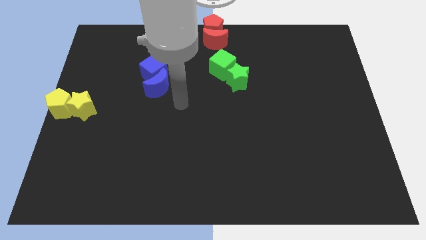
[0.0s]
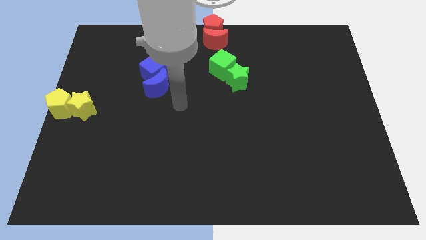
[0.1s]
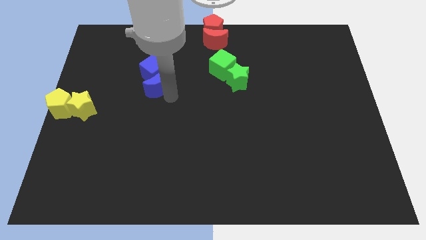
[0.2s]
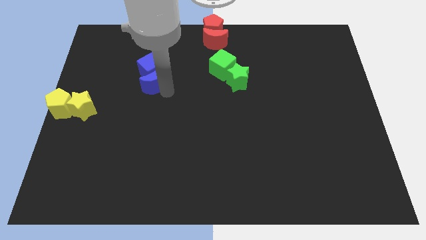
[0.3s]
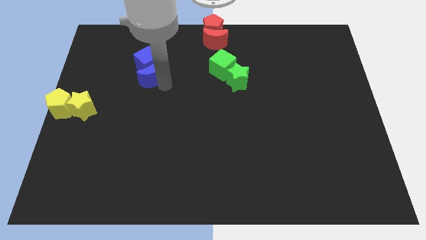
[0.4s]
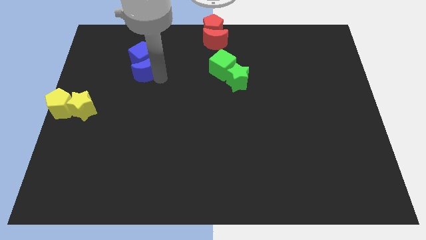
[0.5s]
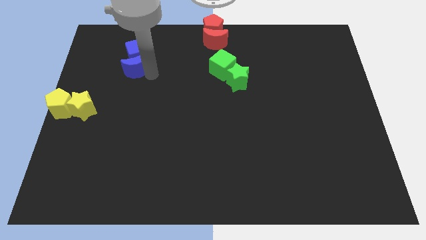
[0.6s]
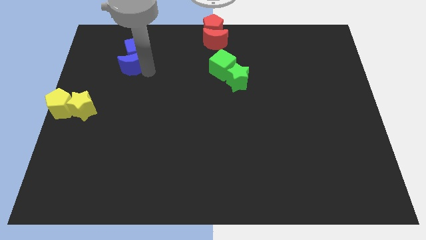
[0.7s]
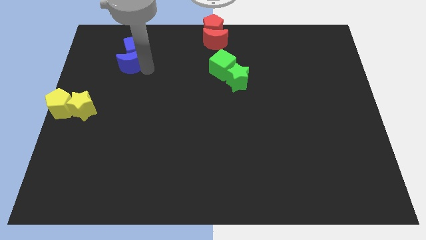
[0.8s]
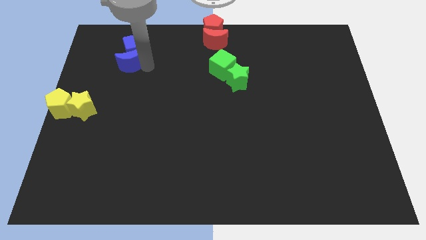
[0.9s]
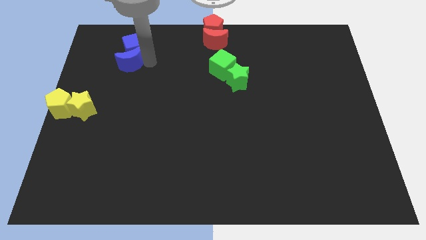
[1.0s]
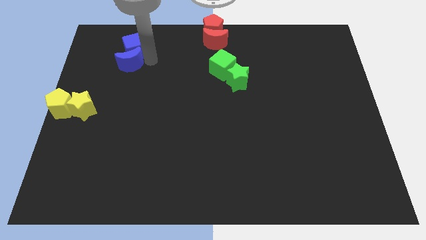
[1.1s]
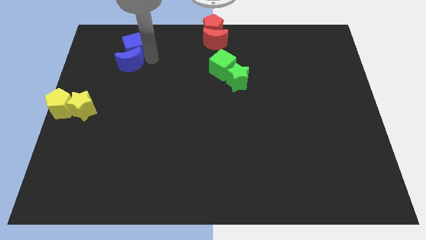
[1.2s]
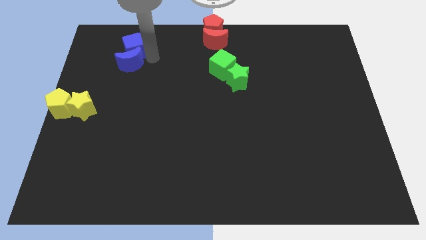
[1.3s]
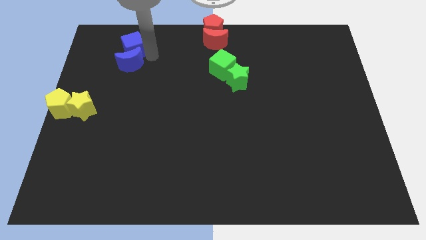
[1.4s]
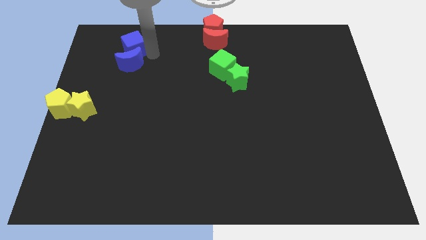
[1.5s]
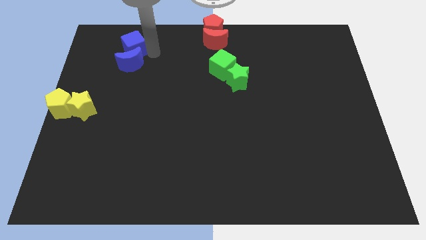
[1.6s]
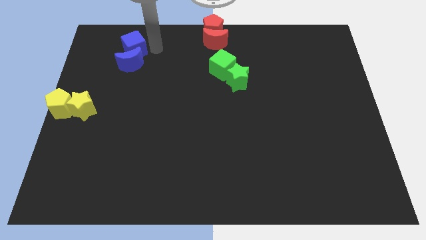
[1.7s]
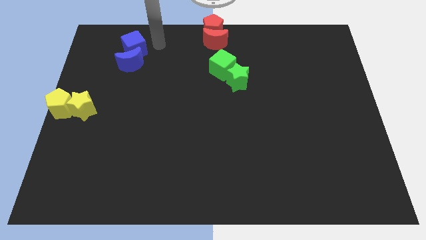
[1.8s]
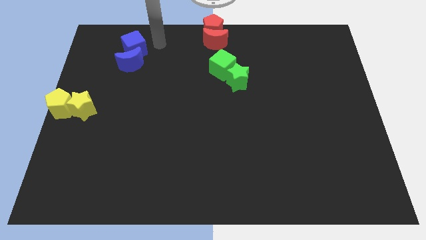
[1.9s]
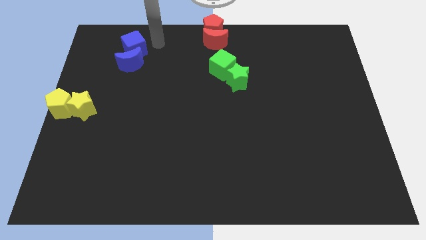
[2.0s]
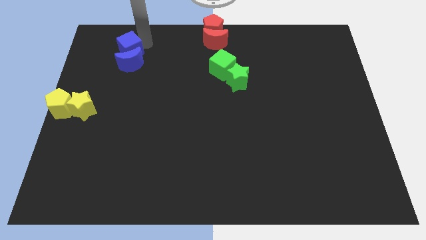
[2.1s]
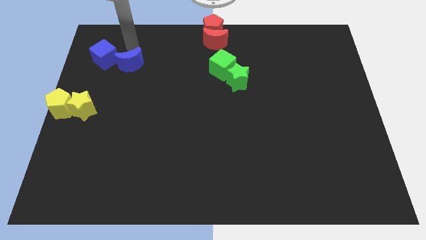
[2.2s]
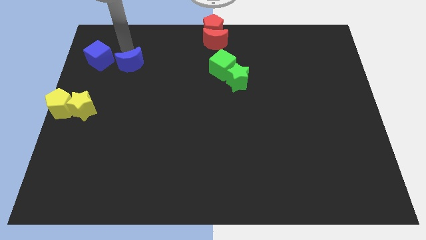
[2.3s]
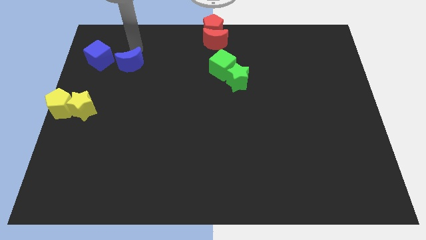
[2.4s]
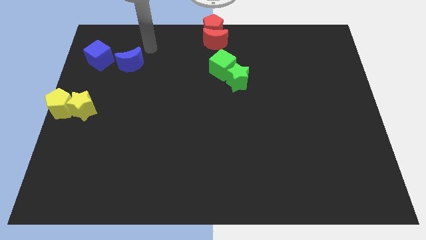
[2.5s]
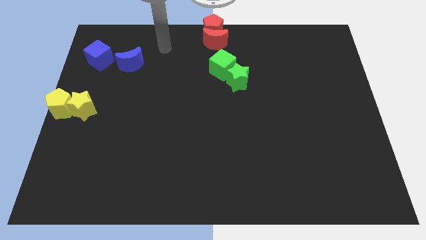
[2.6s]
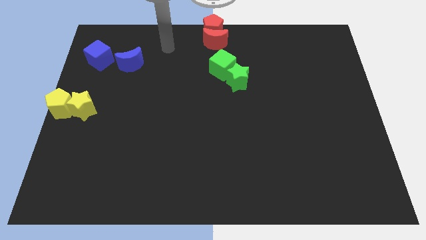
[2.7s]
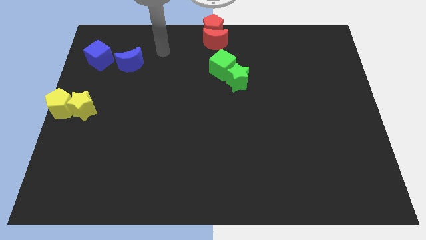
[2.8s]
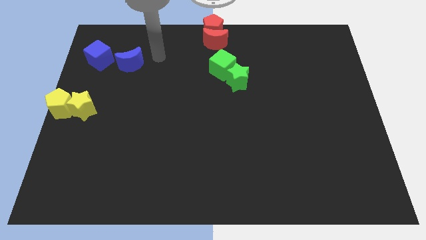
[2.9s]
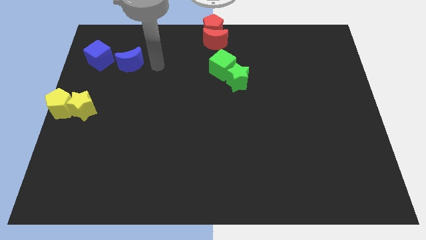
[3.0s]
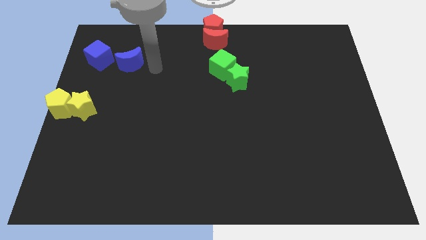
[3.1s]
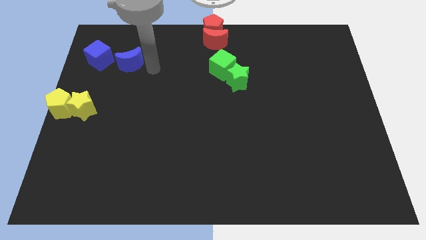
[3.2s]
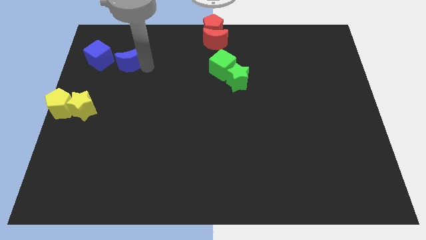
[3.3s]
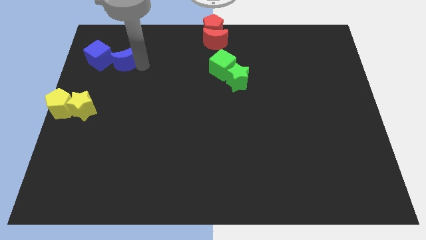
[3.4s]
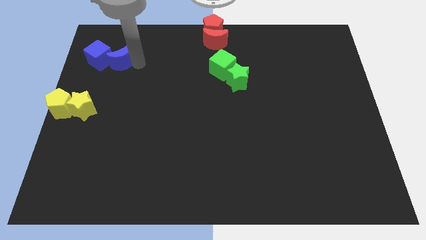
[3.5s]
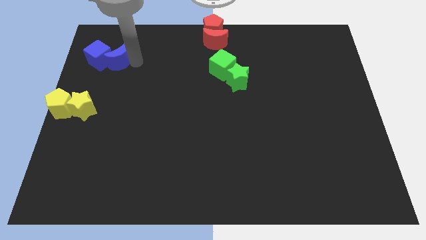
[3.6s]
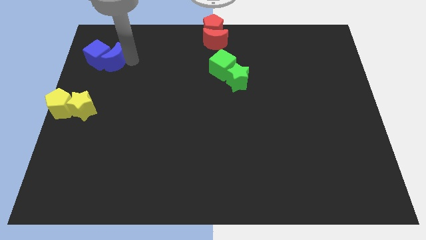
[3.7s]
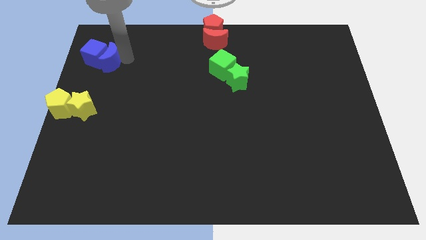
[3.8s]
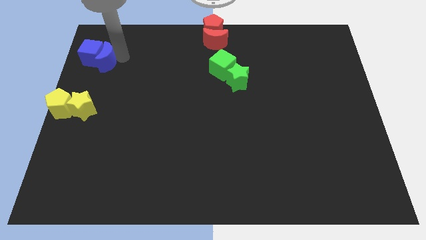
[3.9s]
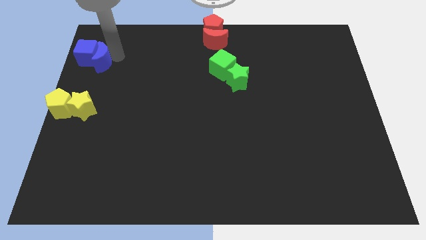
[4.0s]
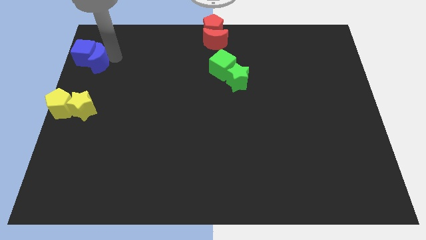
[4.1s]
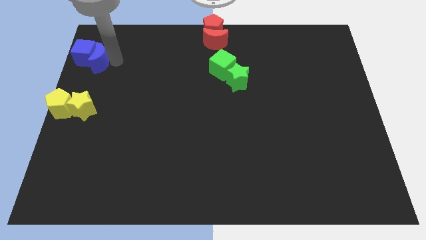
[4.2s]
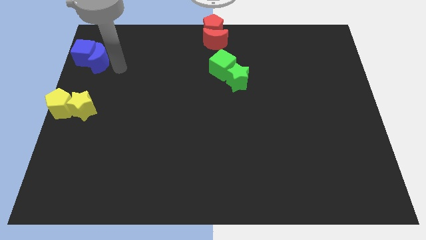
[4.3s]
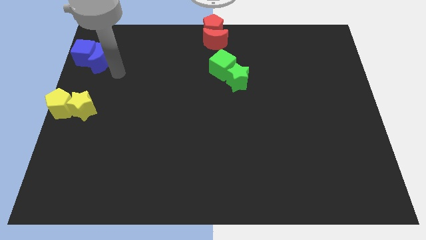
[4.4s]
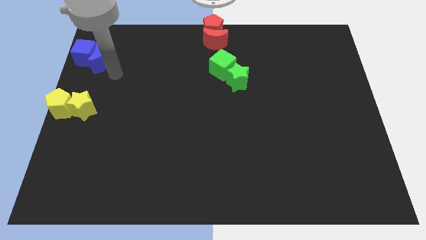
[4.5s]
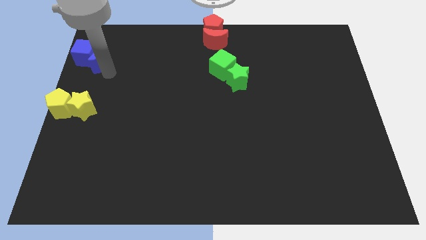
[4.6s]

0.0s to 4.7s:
push the blue crescent along with blue cube to the left of the board

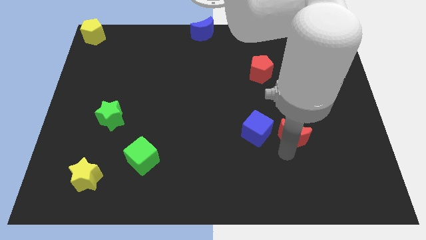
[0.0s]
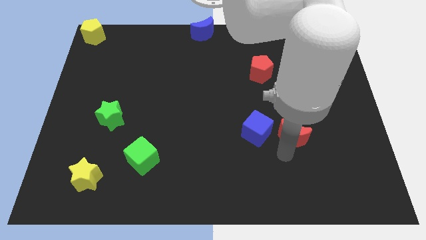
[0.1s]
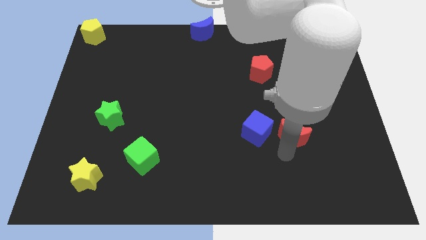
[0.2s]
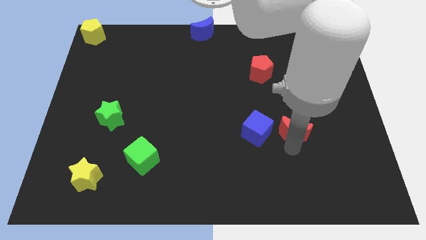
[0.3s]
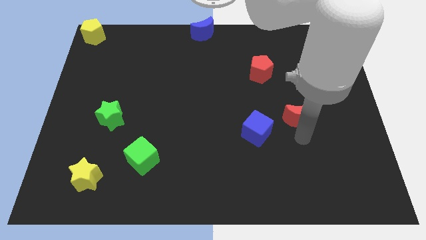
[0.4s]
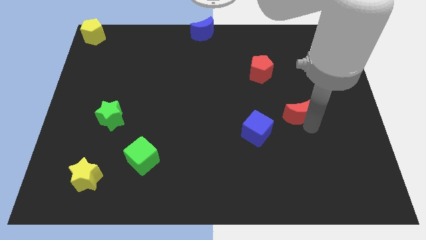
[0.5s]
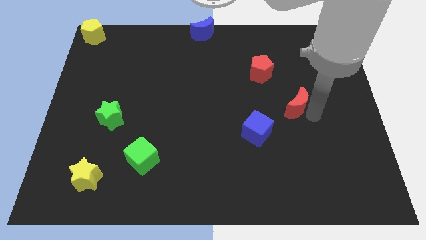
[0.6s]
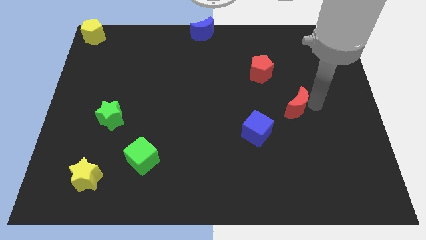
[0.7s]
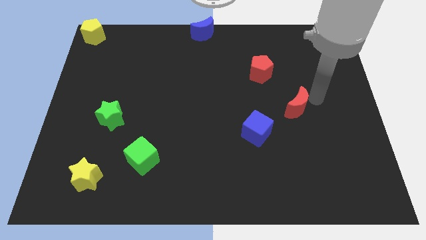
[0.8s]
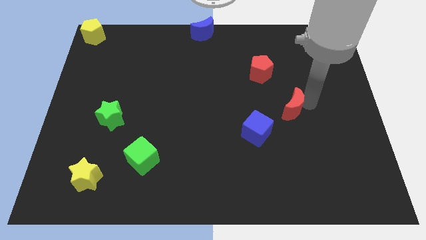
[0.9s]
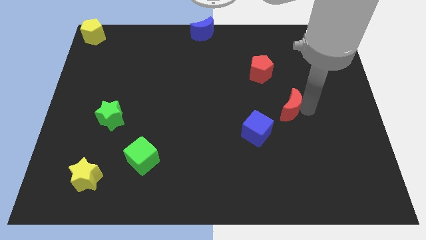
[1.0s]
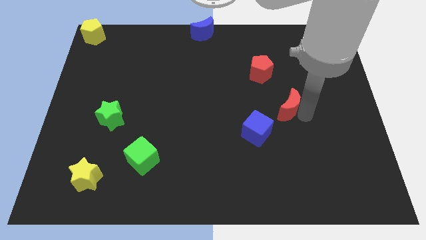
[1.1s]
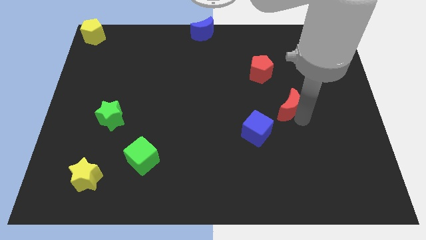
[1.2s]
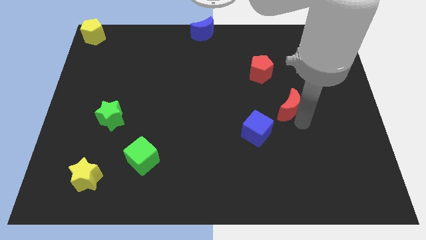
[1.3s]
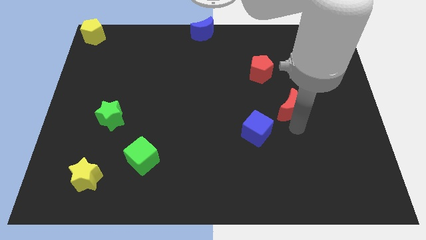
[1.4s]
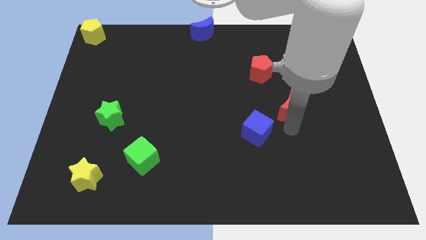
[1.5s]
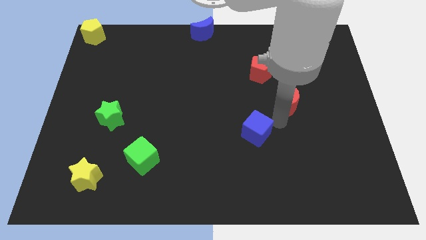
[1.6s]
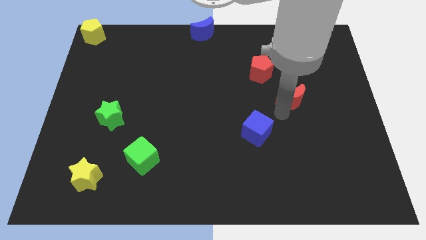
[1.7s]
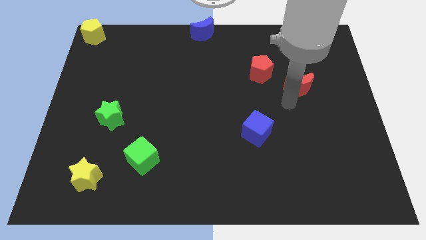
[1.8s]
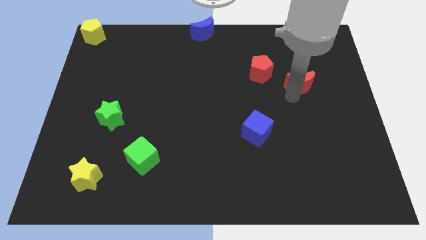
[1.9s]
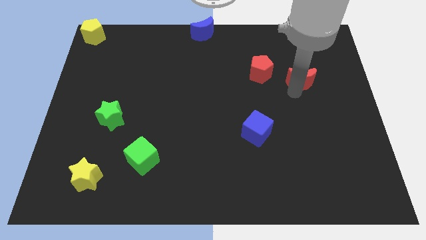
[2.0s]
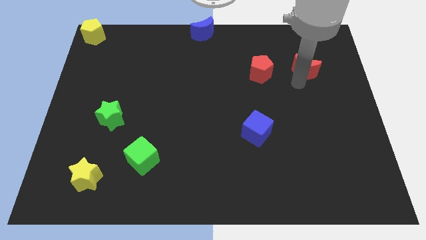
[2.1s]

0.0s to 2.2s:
move red moon to the right of red pentagon

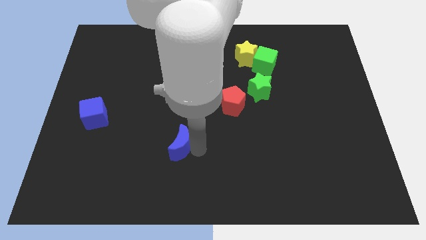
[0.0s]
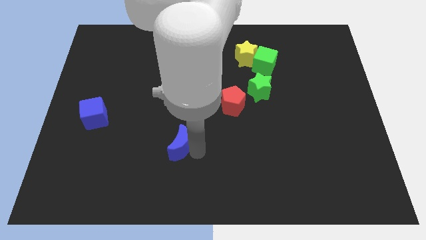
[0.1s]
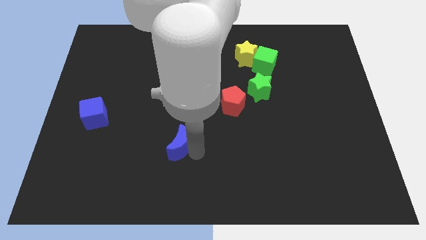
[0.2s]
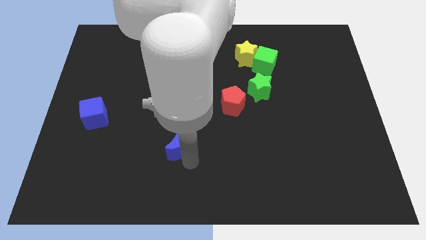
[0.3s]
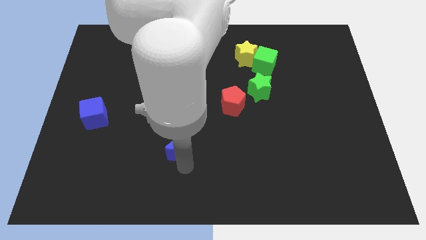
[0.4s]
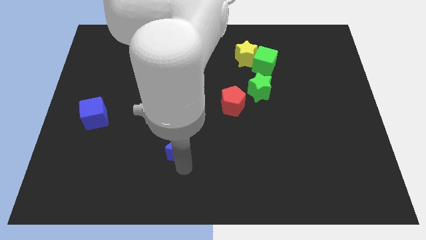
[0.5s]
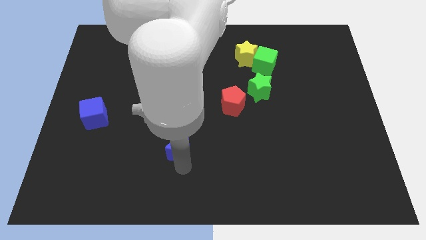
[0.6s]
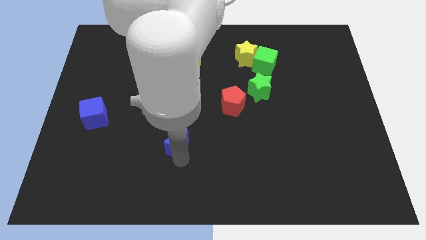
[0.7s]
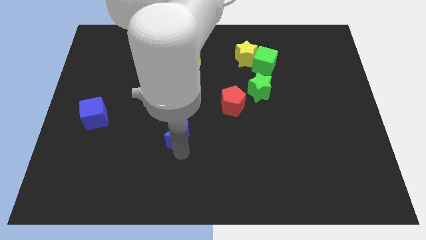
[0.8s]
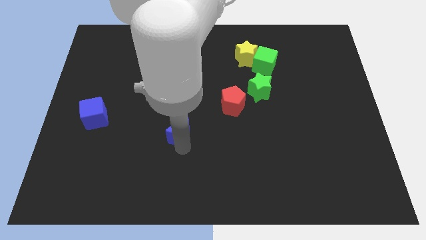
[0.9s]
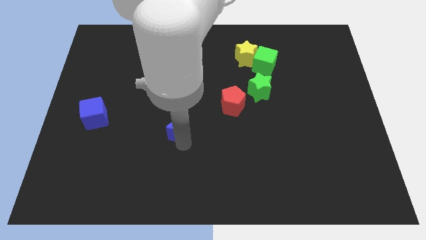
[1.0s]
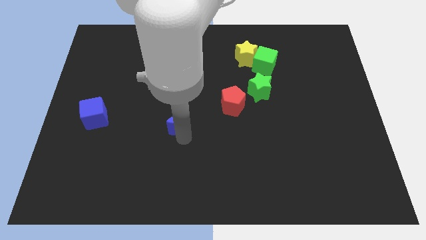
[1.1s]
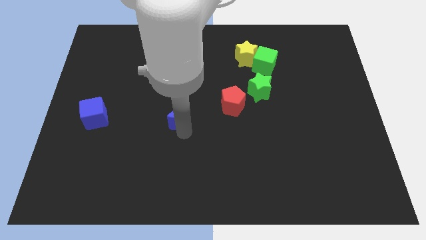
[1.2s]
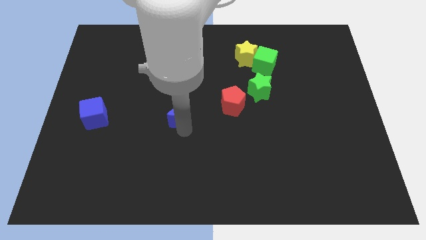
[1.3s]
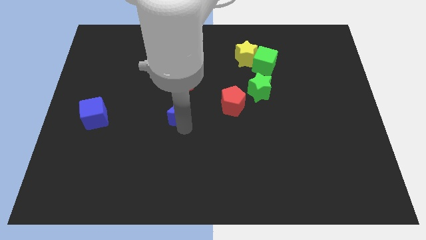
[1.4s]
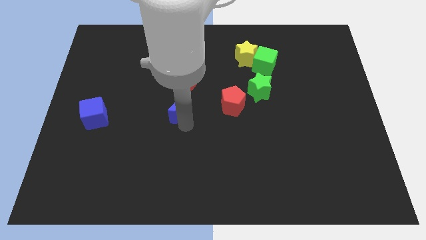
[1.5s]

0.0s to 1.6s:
place the blue moon in between the red pentagon and blue cube

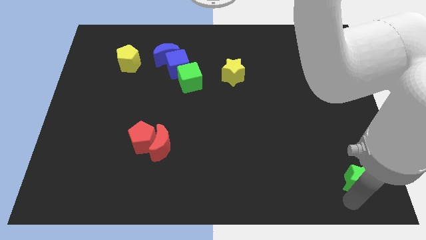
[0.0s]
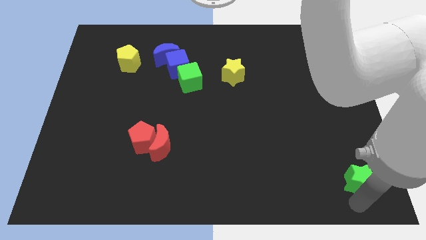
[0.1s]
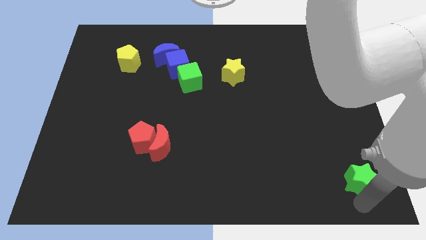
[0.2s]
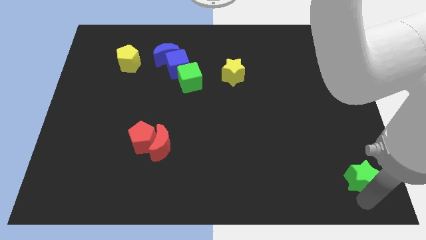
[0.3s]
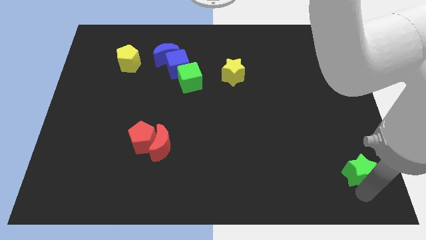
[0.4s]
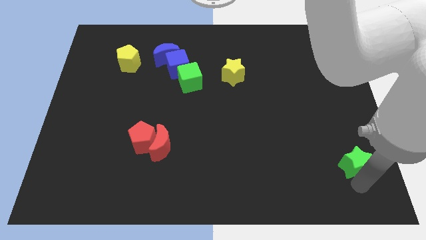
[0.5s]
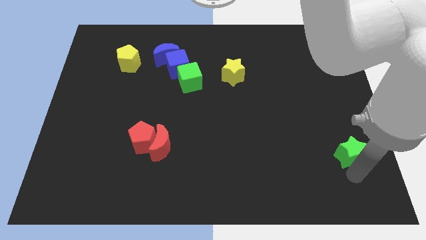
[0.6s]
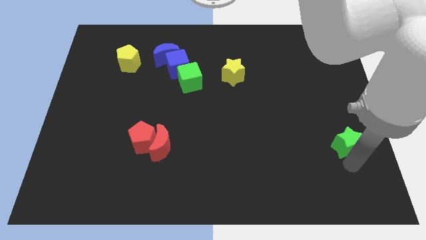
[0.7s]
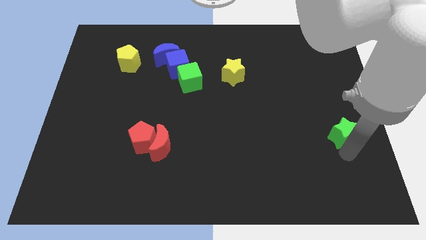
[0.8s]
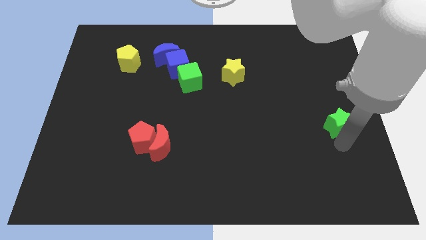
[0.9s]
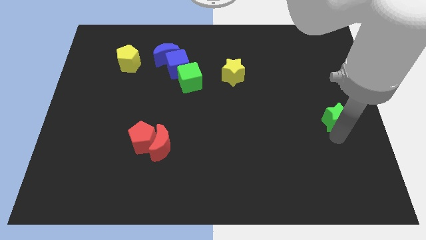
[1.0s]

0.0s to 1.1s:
push the green star to the middle right of the board
